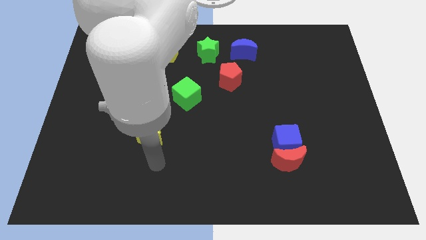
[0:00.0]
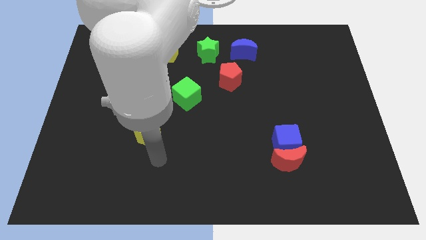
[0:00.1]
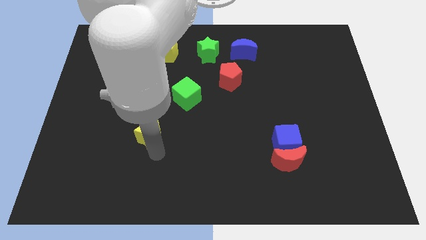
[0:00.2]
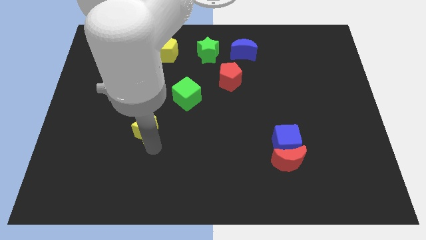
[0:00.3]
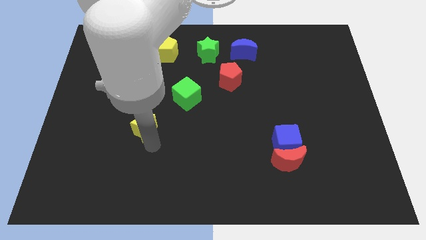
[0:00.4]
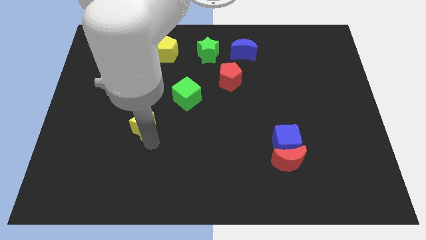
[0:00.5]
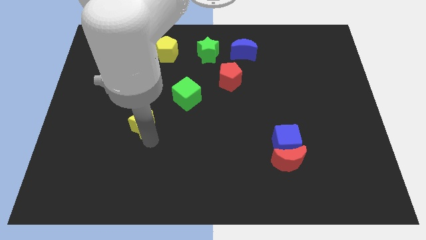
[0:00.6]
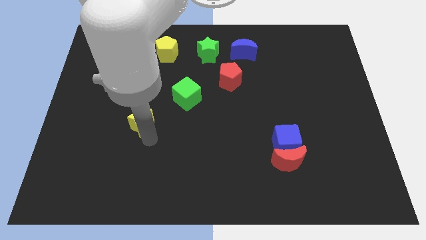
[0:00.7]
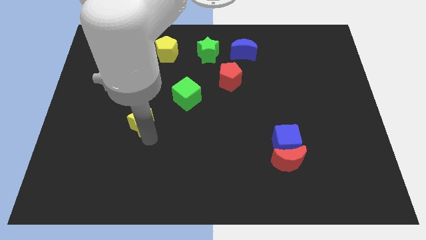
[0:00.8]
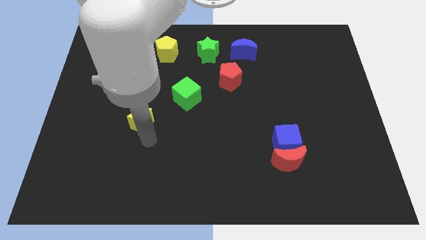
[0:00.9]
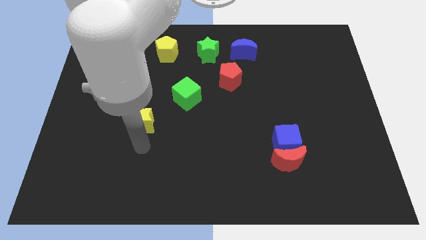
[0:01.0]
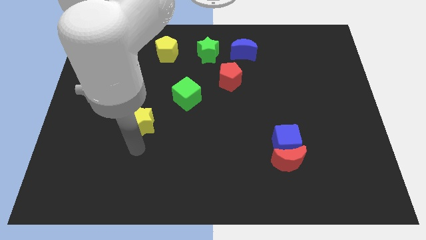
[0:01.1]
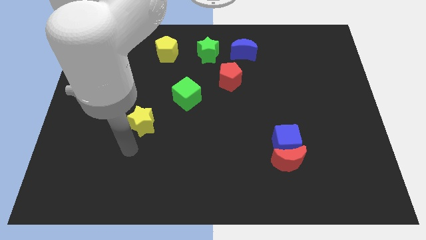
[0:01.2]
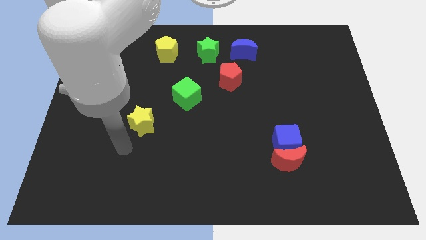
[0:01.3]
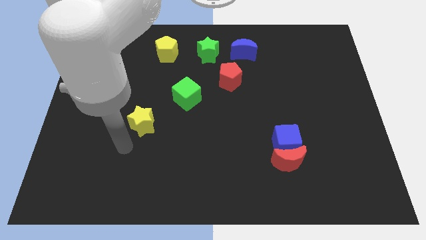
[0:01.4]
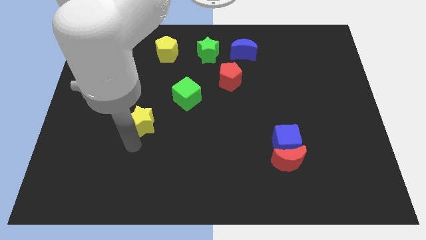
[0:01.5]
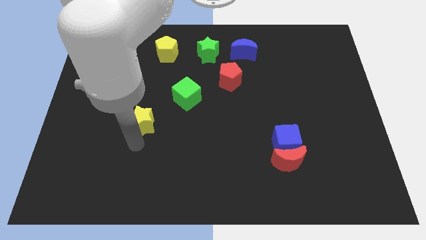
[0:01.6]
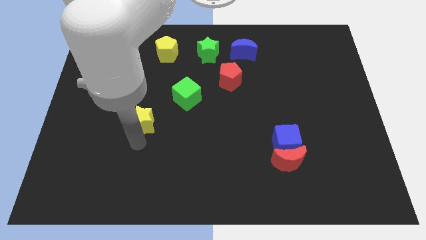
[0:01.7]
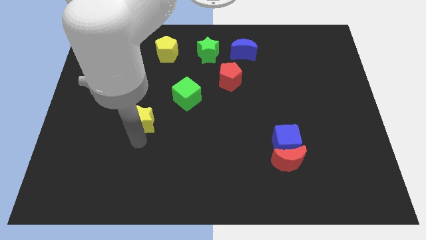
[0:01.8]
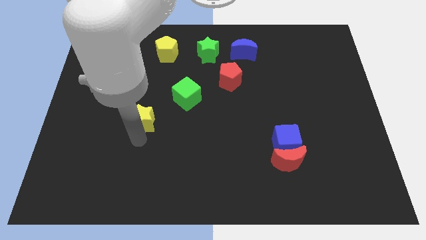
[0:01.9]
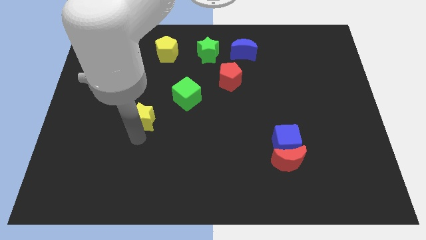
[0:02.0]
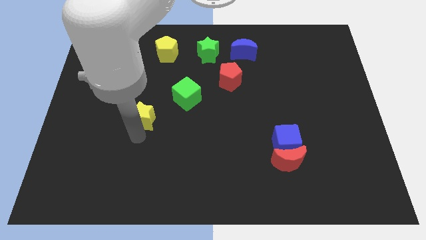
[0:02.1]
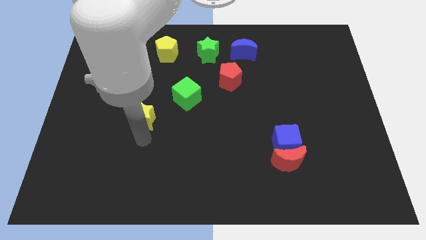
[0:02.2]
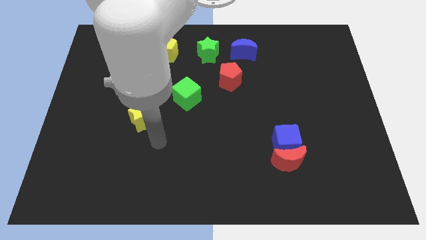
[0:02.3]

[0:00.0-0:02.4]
move the yellow star slightly to the top

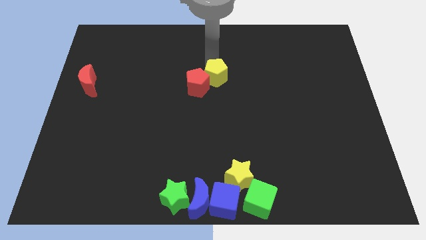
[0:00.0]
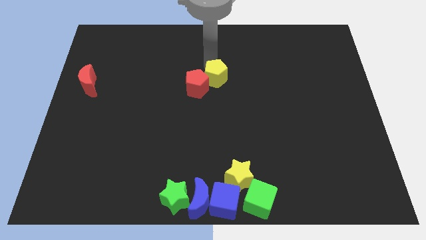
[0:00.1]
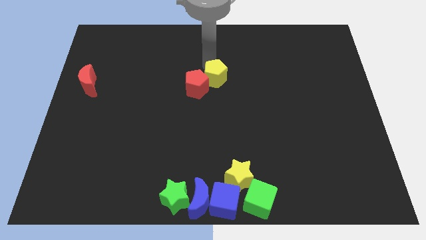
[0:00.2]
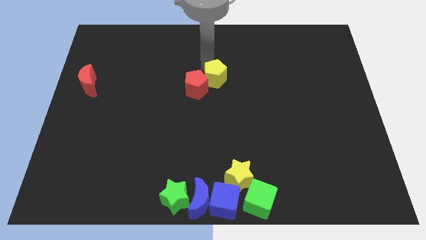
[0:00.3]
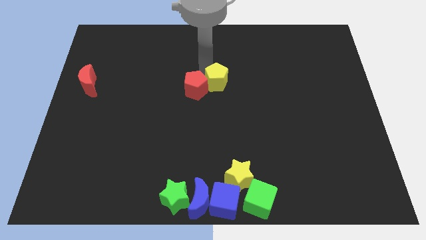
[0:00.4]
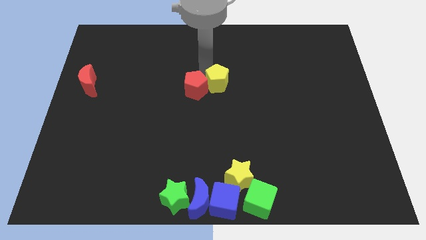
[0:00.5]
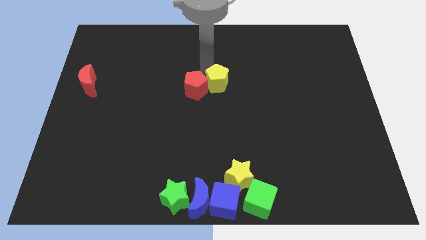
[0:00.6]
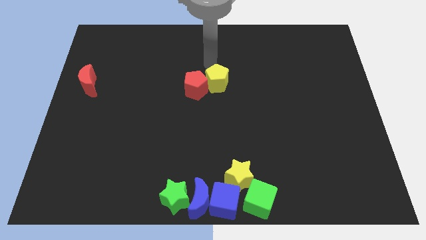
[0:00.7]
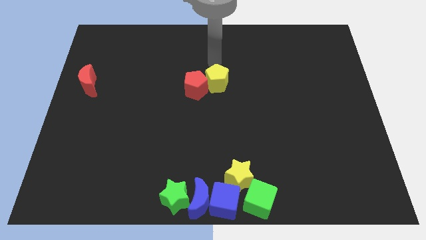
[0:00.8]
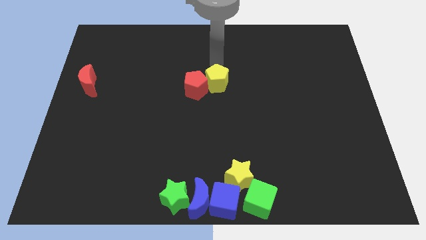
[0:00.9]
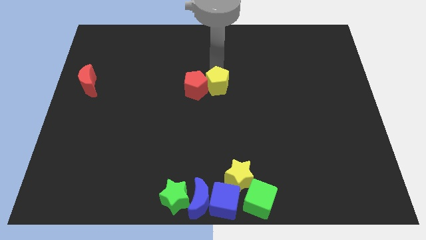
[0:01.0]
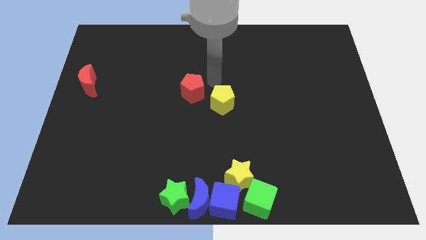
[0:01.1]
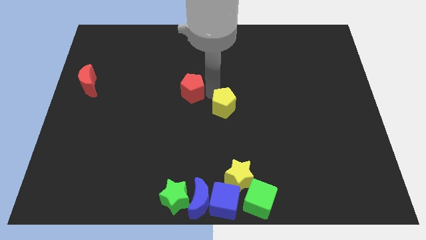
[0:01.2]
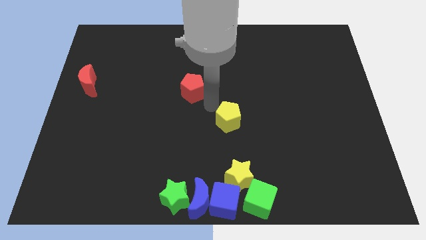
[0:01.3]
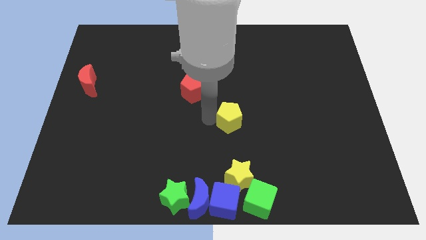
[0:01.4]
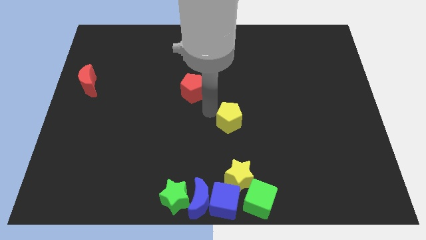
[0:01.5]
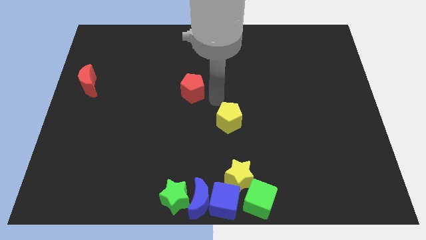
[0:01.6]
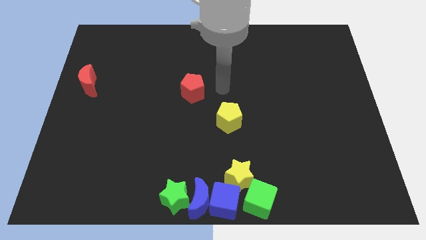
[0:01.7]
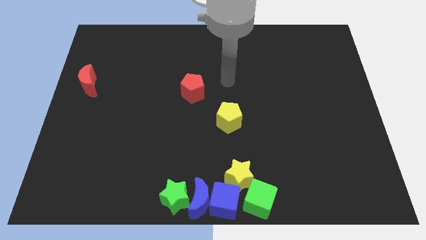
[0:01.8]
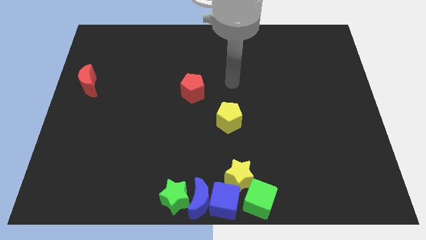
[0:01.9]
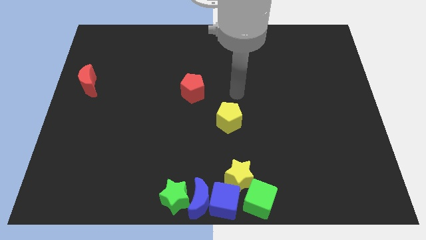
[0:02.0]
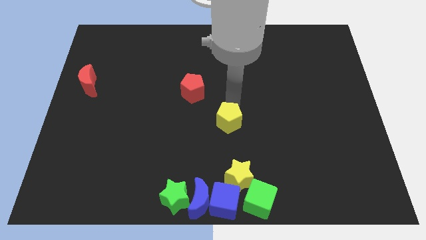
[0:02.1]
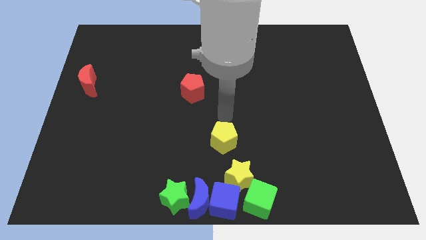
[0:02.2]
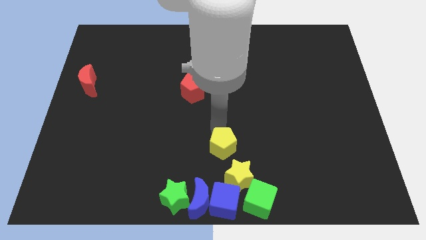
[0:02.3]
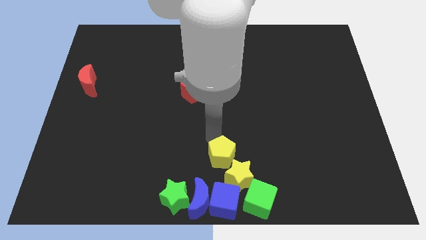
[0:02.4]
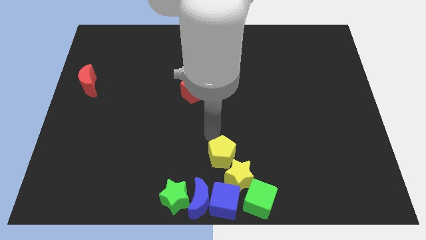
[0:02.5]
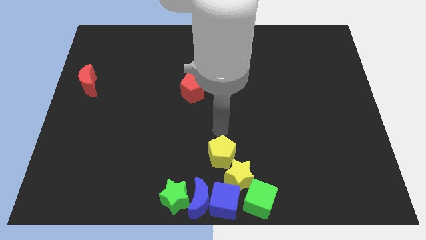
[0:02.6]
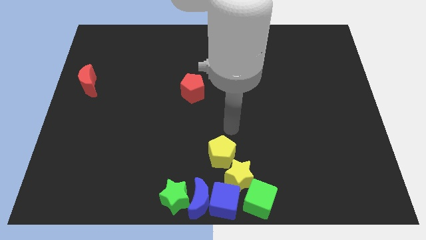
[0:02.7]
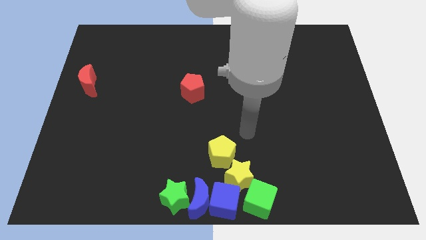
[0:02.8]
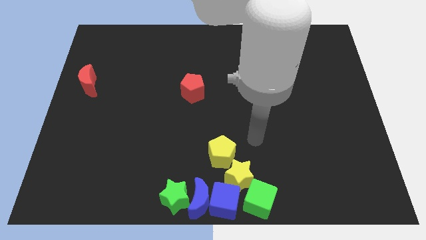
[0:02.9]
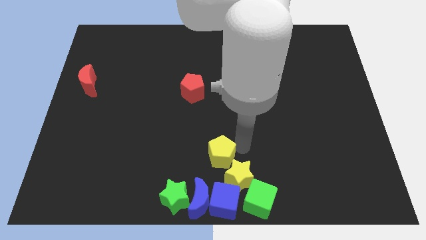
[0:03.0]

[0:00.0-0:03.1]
slide the yellow pentagon to the bottom center

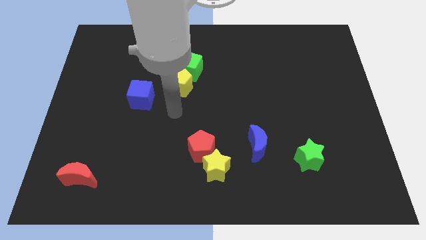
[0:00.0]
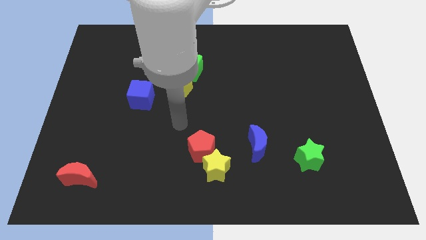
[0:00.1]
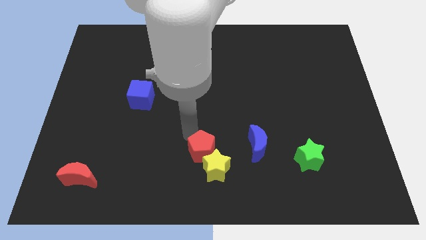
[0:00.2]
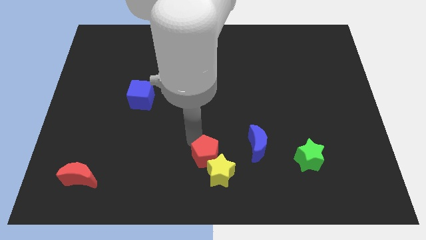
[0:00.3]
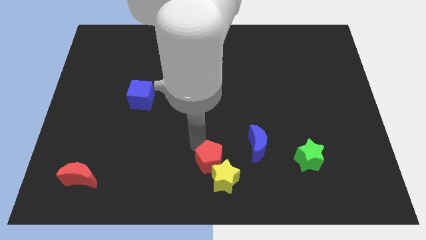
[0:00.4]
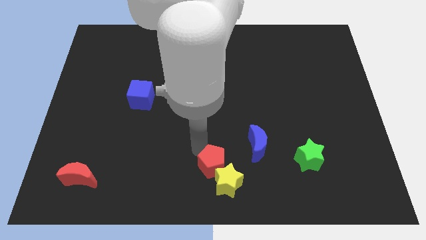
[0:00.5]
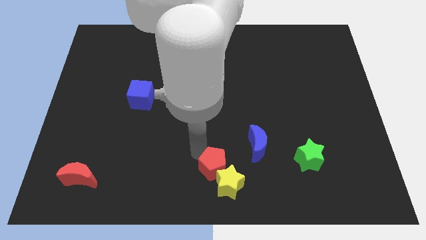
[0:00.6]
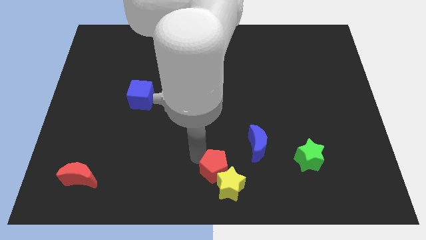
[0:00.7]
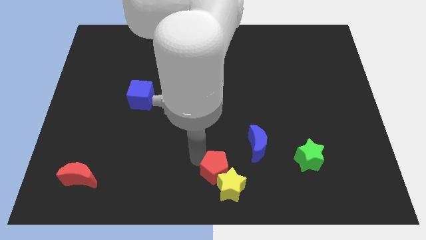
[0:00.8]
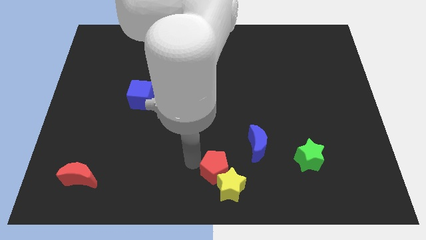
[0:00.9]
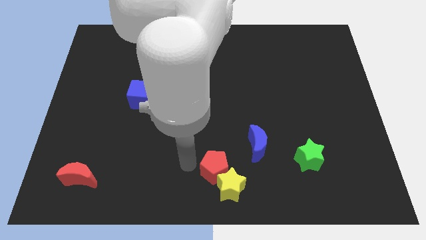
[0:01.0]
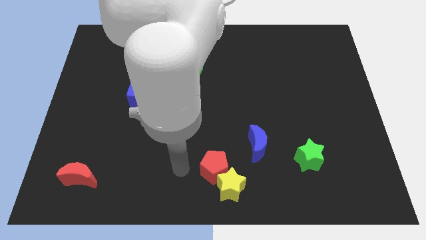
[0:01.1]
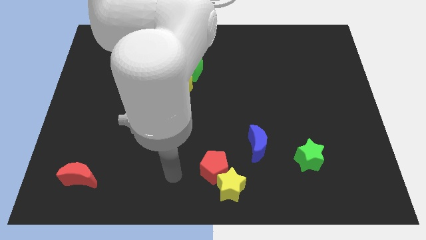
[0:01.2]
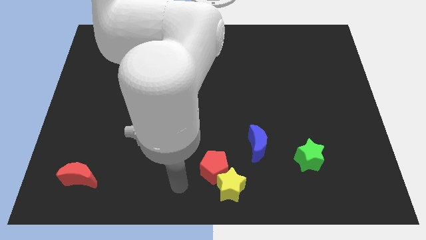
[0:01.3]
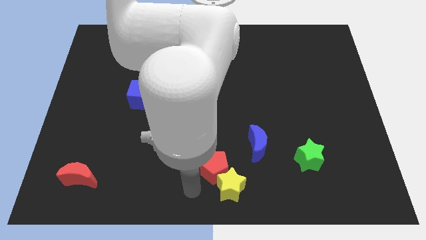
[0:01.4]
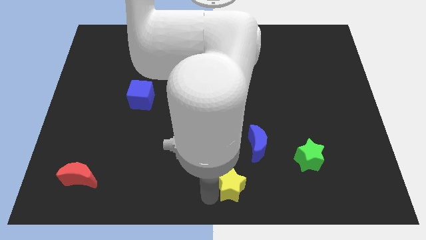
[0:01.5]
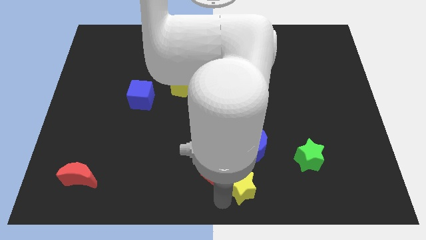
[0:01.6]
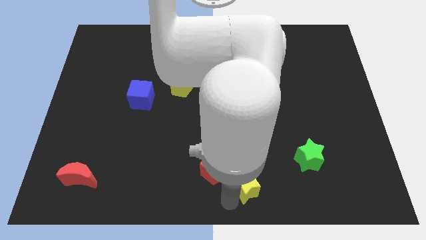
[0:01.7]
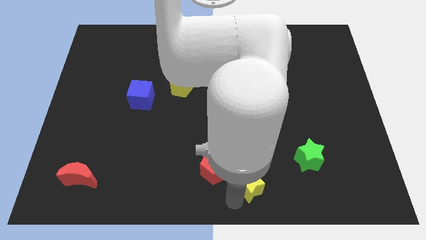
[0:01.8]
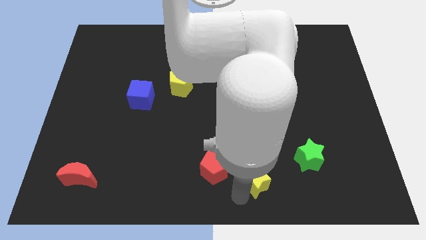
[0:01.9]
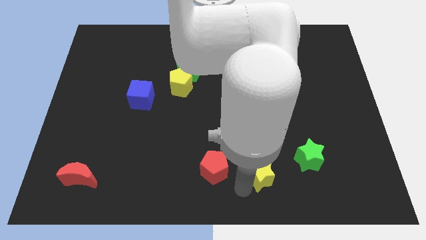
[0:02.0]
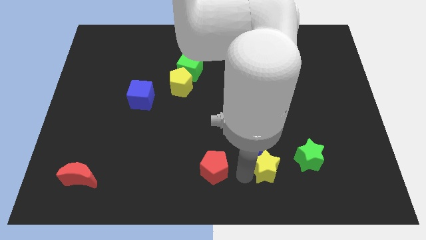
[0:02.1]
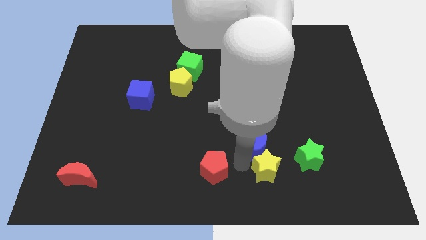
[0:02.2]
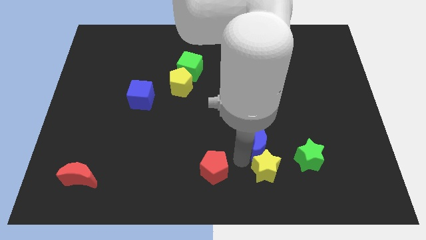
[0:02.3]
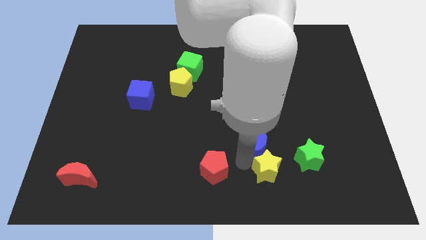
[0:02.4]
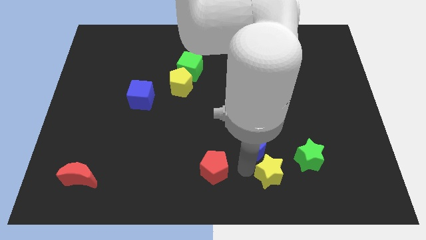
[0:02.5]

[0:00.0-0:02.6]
move yellow star below the blue moon

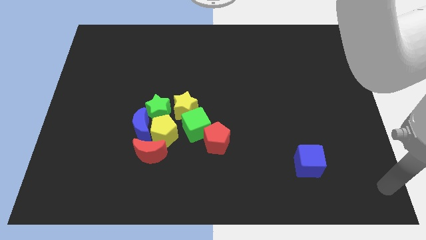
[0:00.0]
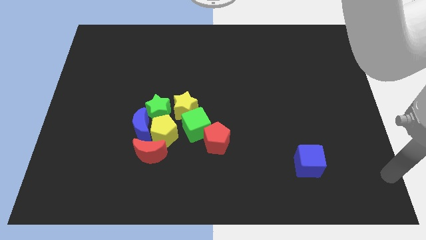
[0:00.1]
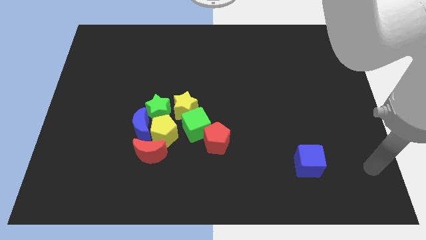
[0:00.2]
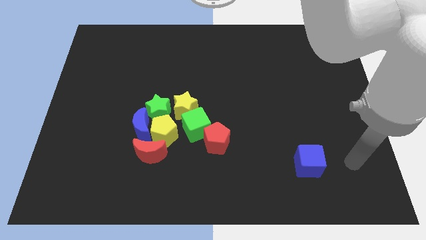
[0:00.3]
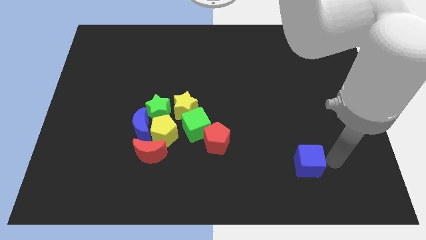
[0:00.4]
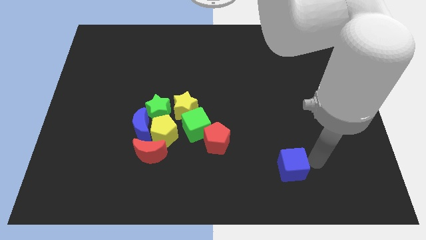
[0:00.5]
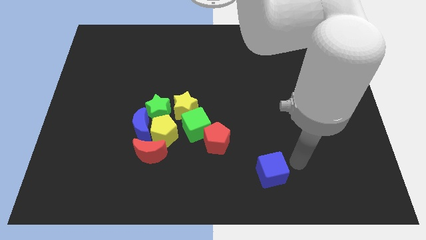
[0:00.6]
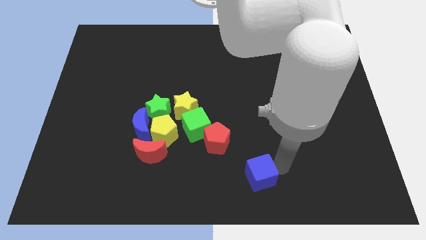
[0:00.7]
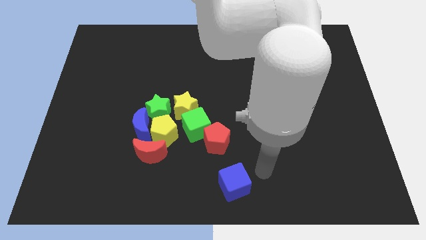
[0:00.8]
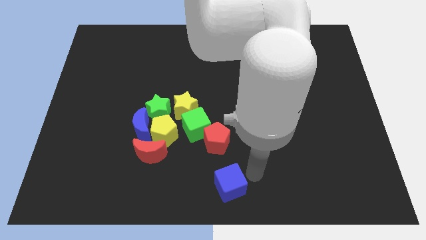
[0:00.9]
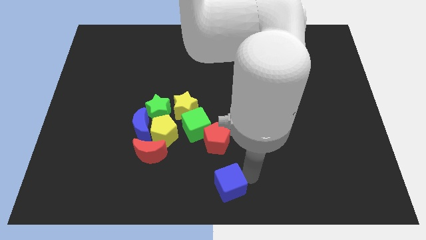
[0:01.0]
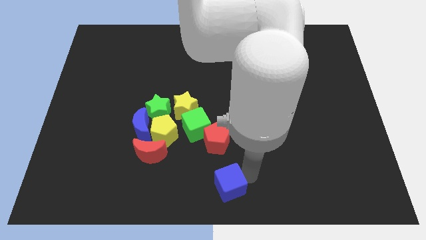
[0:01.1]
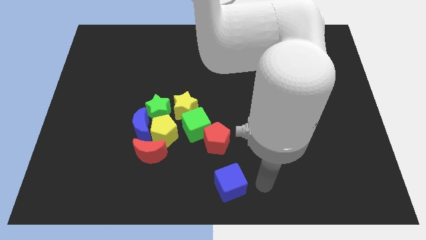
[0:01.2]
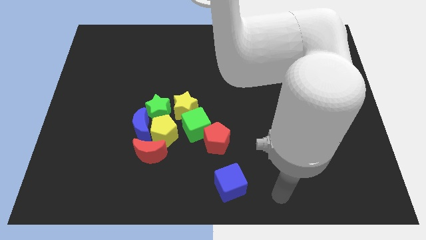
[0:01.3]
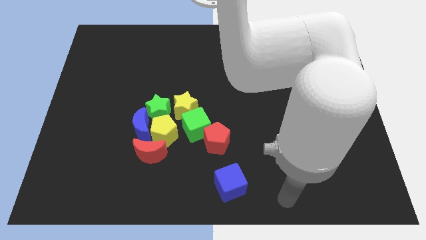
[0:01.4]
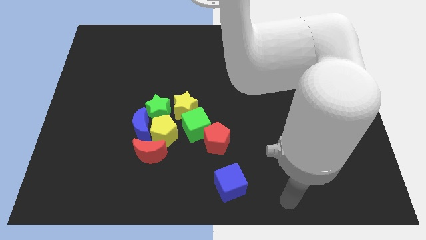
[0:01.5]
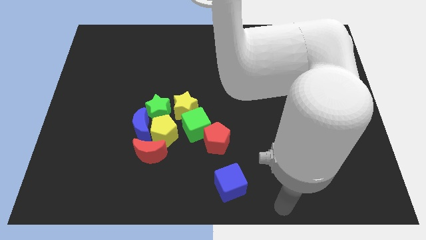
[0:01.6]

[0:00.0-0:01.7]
move the blue cube to the left
